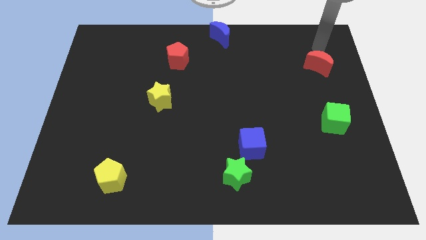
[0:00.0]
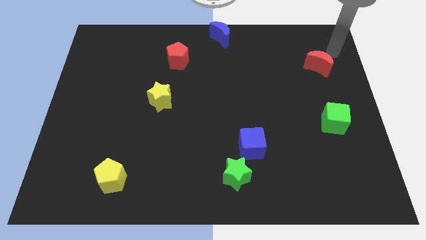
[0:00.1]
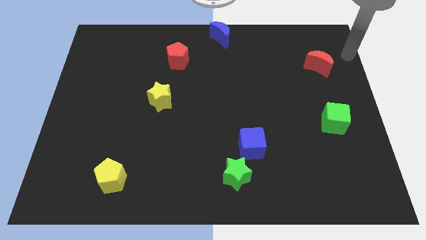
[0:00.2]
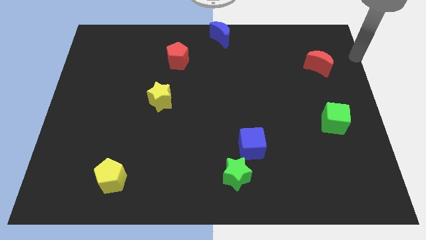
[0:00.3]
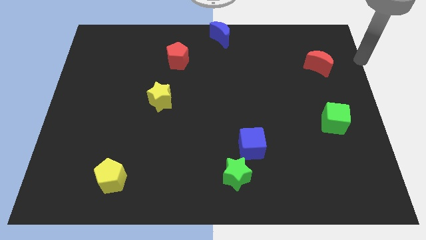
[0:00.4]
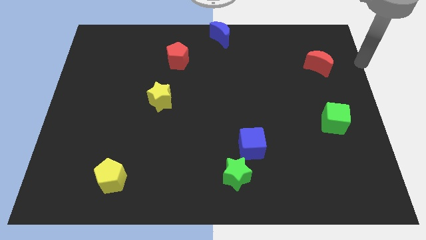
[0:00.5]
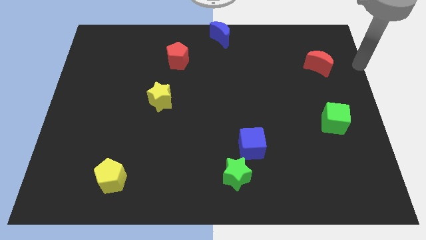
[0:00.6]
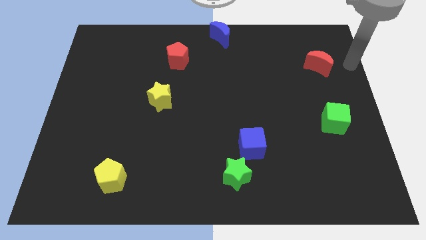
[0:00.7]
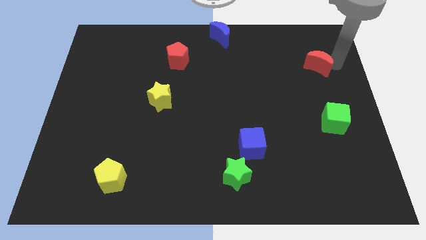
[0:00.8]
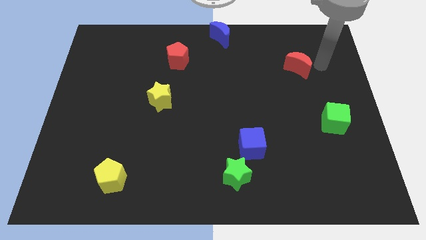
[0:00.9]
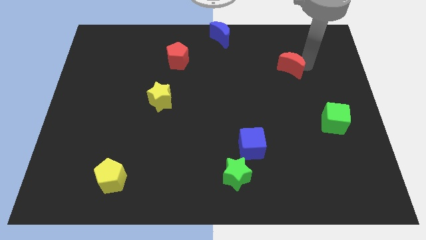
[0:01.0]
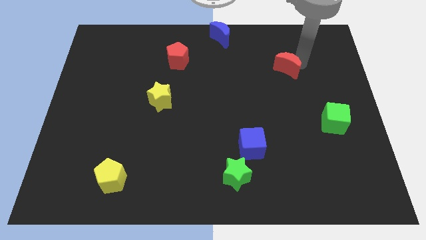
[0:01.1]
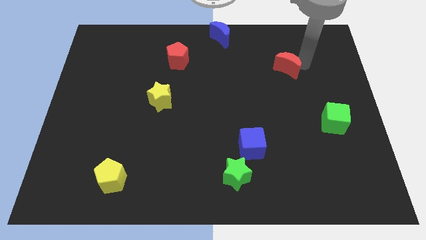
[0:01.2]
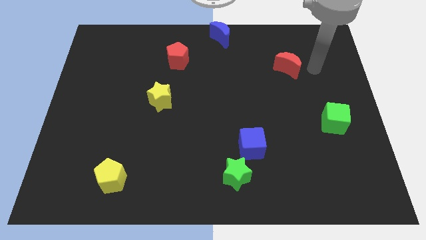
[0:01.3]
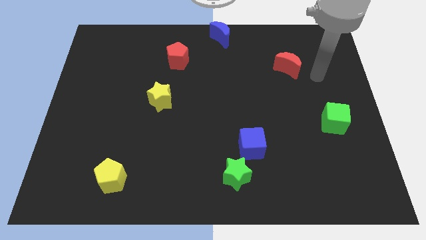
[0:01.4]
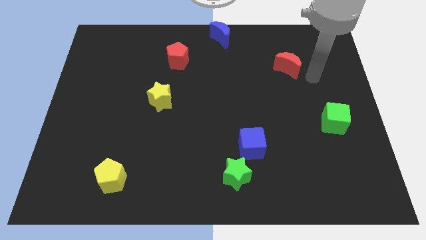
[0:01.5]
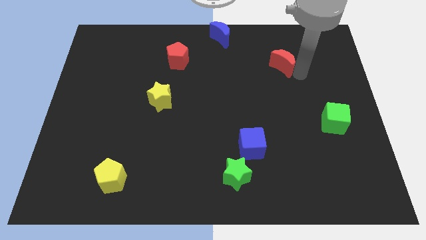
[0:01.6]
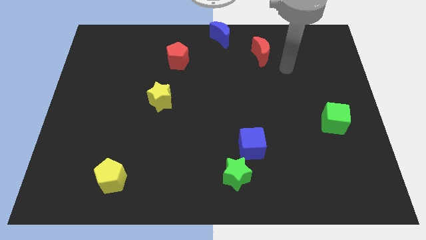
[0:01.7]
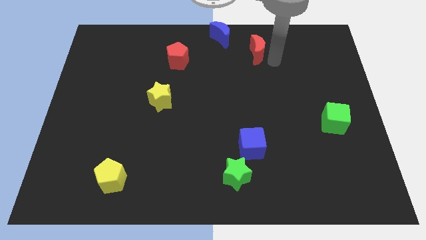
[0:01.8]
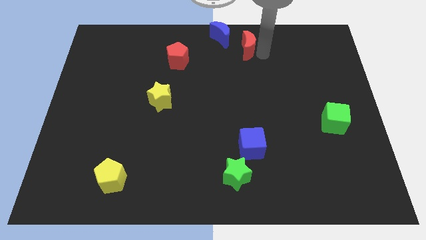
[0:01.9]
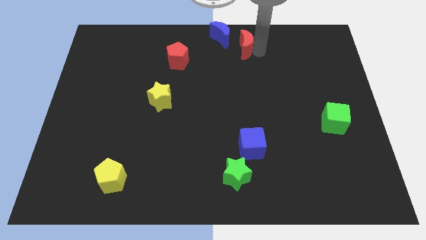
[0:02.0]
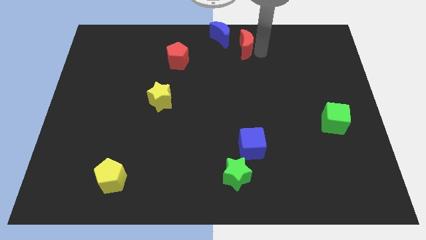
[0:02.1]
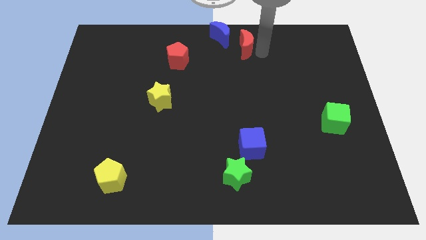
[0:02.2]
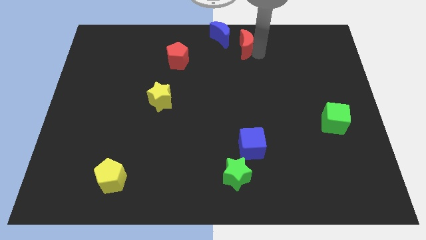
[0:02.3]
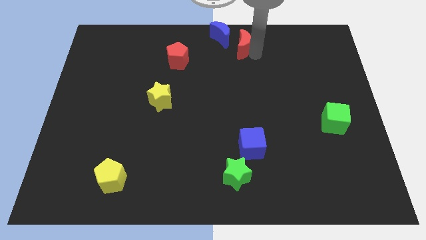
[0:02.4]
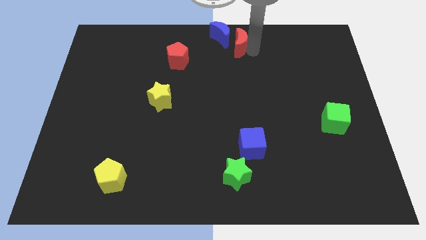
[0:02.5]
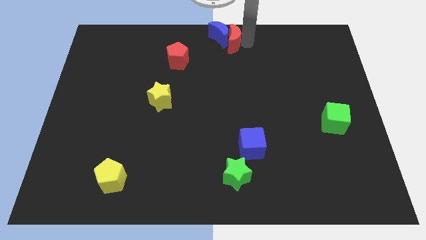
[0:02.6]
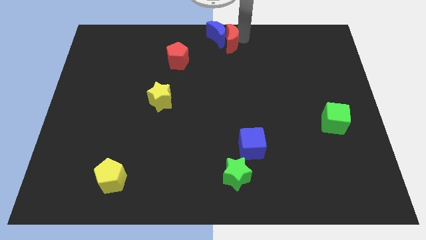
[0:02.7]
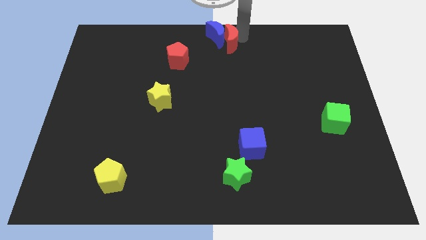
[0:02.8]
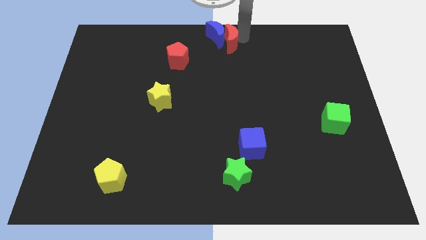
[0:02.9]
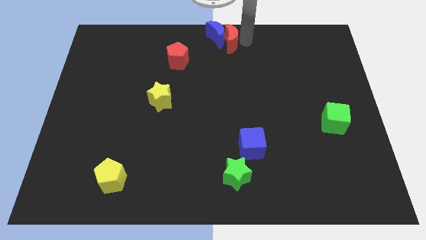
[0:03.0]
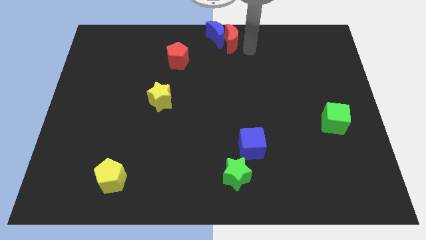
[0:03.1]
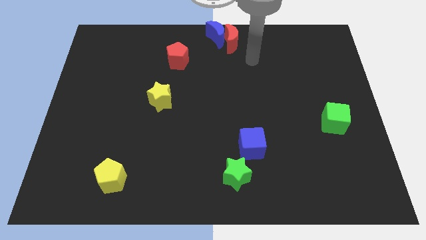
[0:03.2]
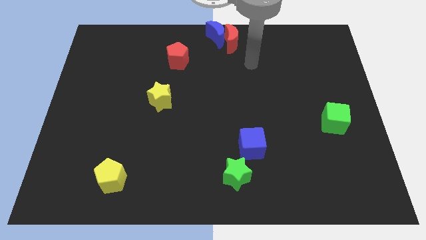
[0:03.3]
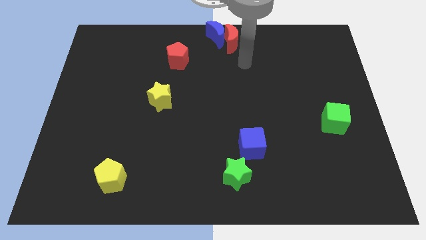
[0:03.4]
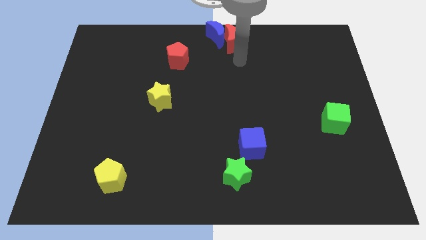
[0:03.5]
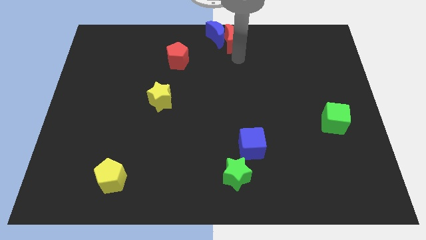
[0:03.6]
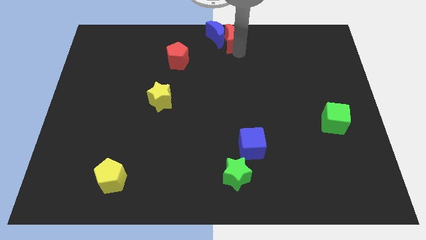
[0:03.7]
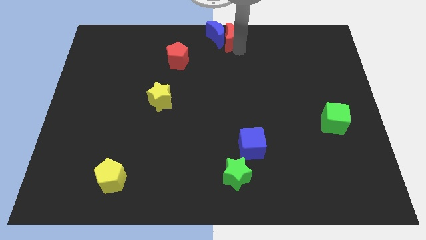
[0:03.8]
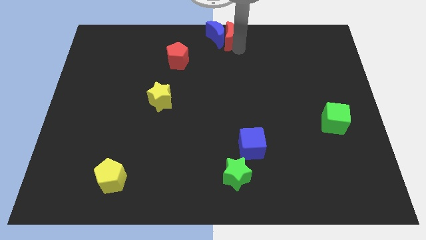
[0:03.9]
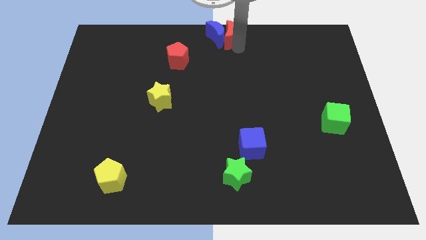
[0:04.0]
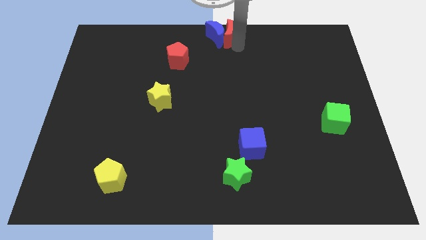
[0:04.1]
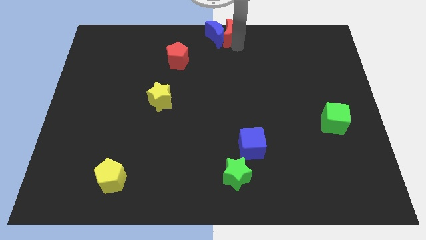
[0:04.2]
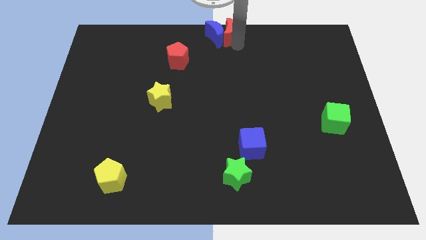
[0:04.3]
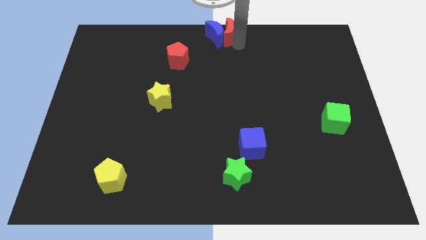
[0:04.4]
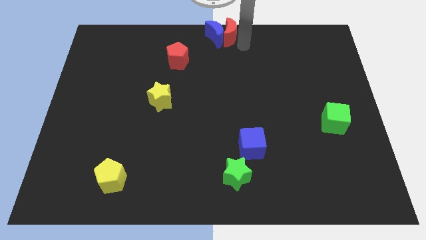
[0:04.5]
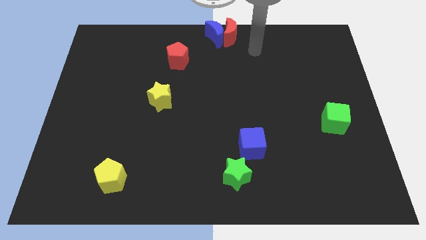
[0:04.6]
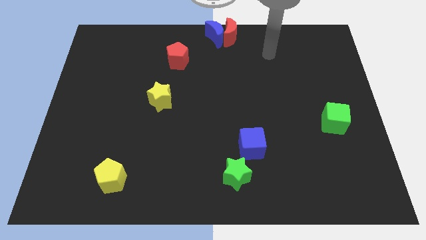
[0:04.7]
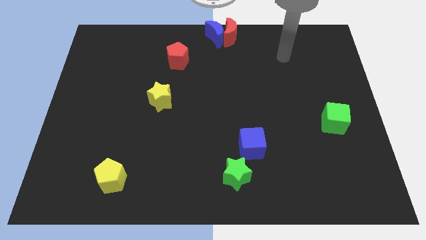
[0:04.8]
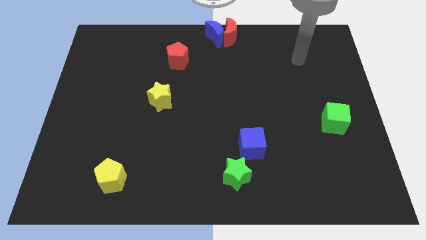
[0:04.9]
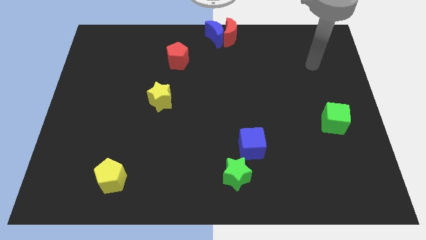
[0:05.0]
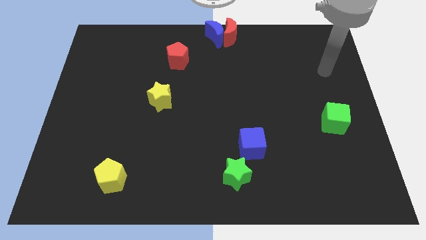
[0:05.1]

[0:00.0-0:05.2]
push the red crescent into the blue crescent

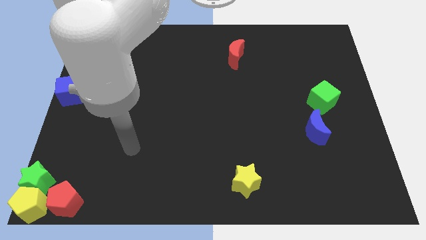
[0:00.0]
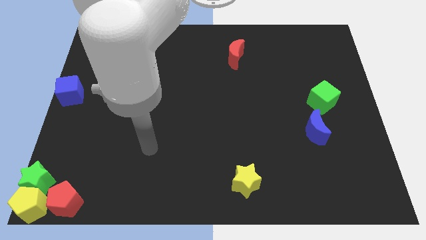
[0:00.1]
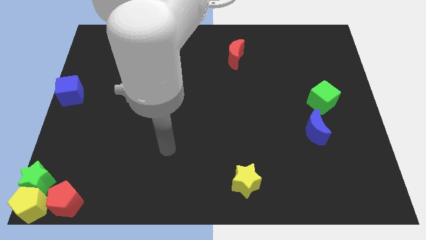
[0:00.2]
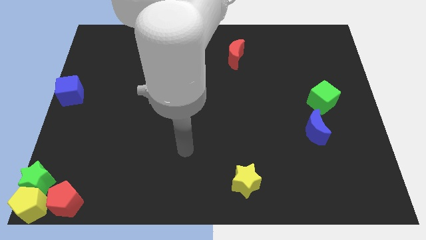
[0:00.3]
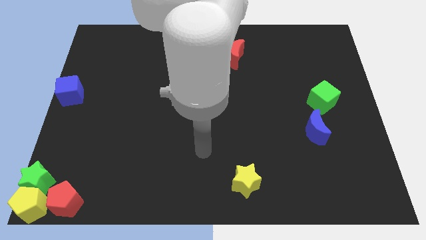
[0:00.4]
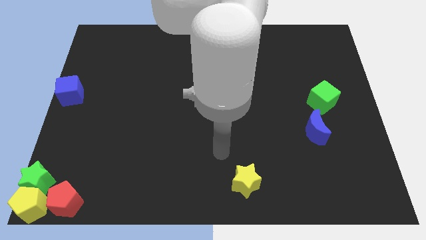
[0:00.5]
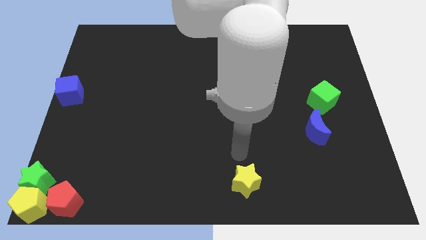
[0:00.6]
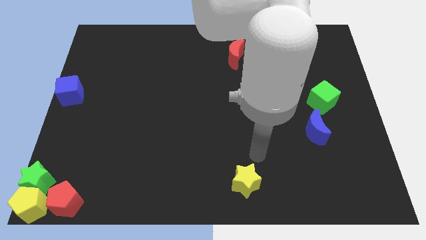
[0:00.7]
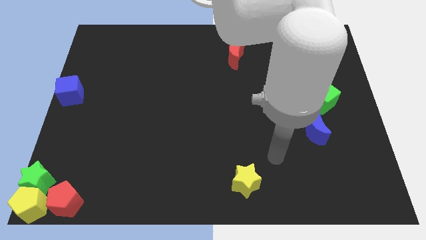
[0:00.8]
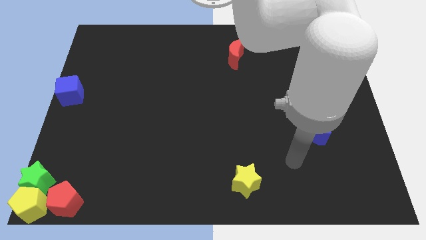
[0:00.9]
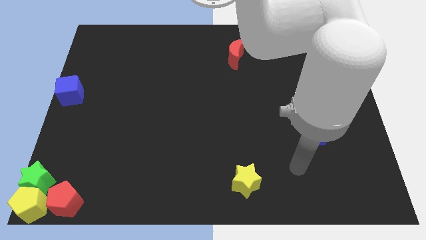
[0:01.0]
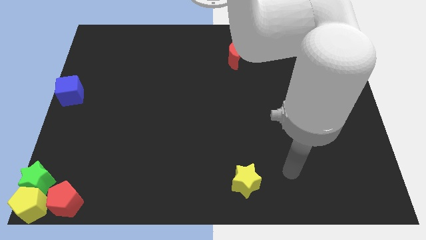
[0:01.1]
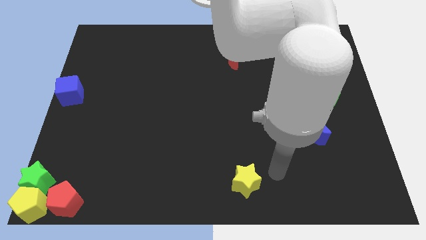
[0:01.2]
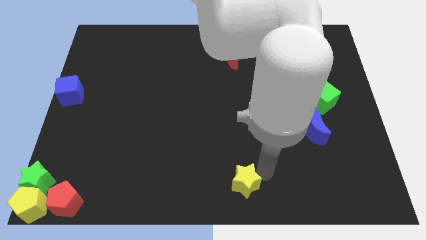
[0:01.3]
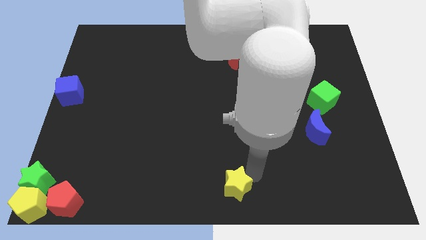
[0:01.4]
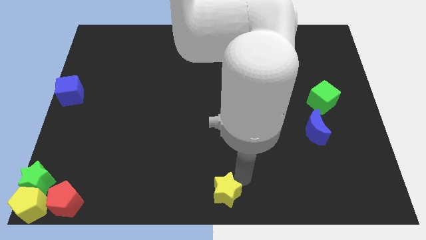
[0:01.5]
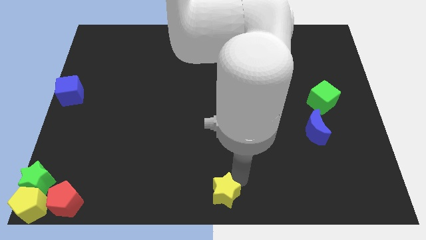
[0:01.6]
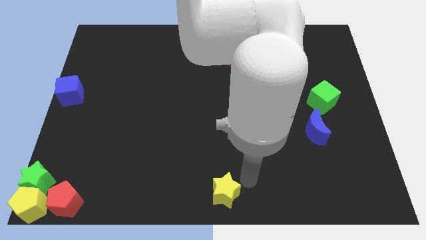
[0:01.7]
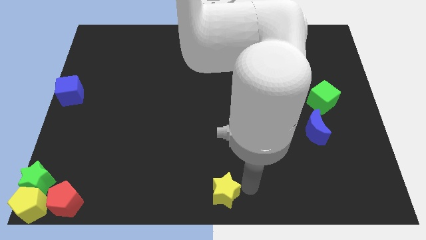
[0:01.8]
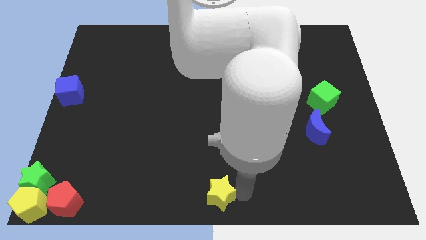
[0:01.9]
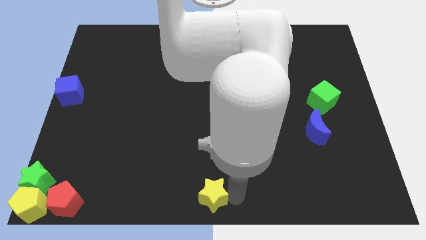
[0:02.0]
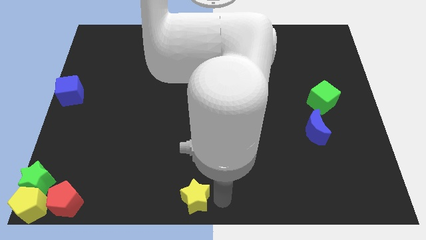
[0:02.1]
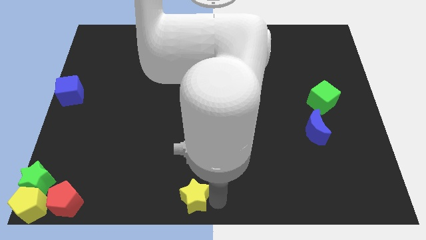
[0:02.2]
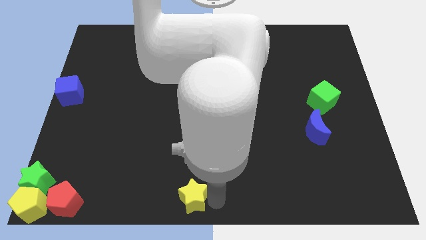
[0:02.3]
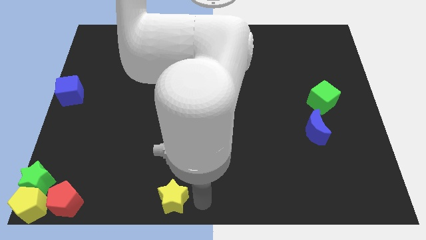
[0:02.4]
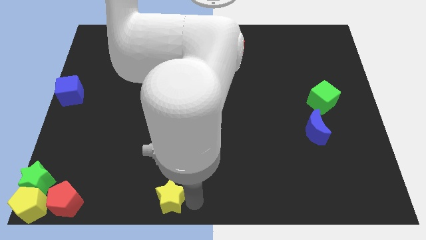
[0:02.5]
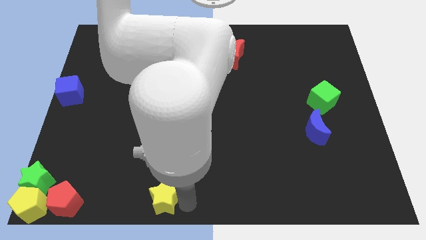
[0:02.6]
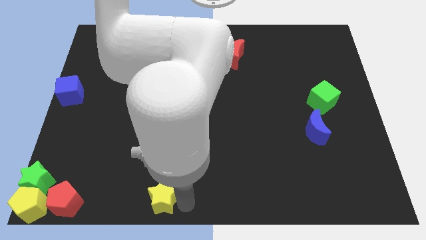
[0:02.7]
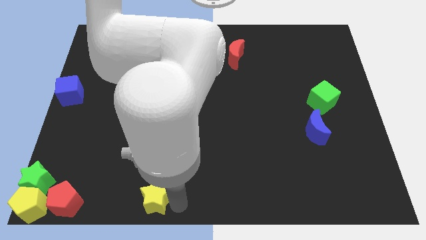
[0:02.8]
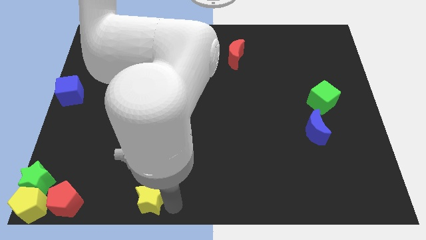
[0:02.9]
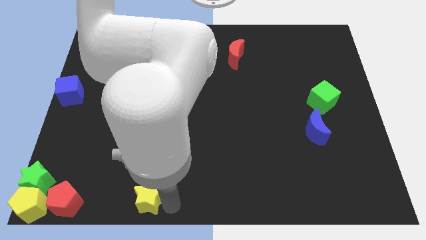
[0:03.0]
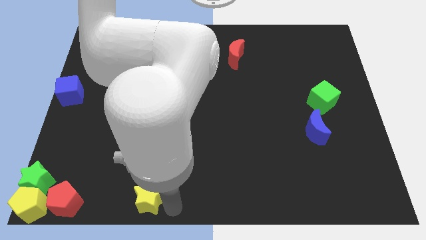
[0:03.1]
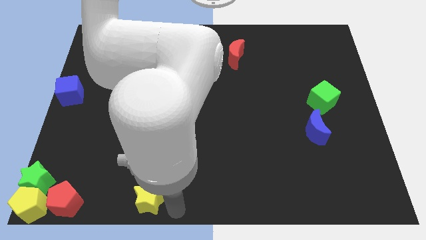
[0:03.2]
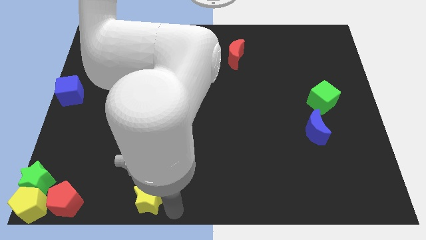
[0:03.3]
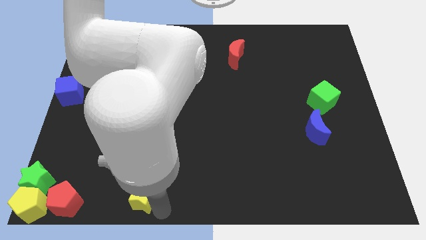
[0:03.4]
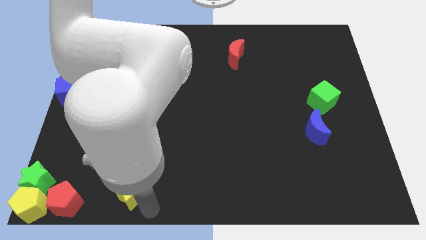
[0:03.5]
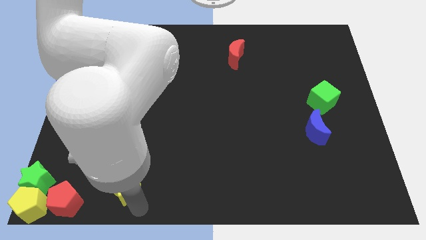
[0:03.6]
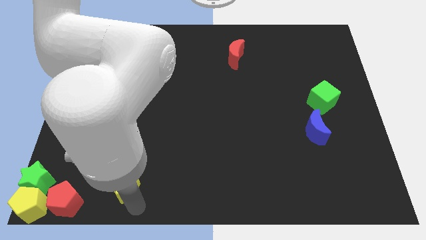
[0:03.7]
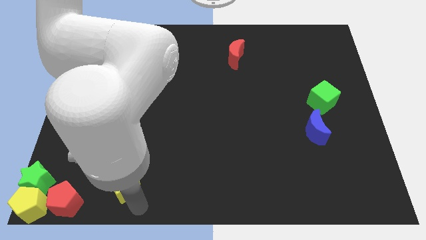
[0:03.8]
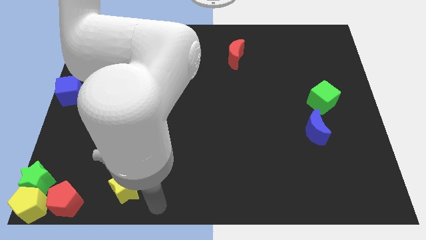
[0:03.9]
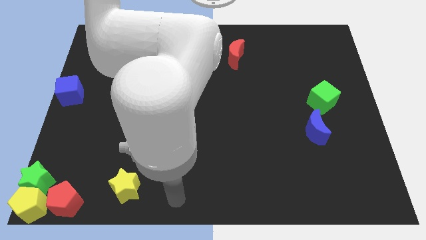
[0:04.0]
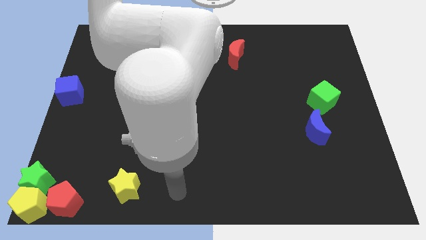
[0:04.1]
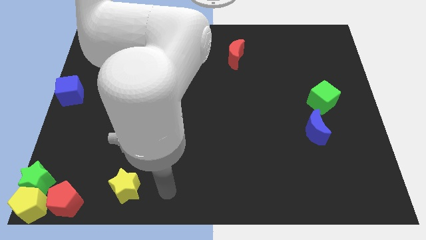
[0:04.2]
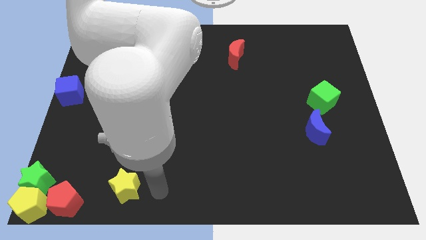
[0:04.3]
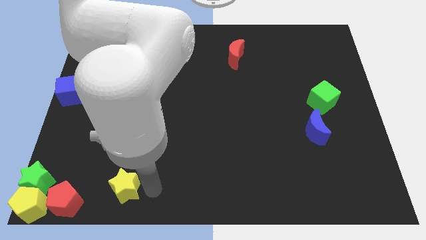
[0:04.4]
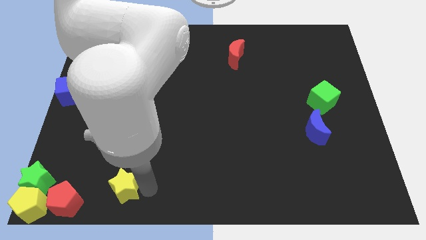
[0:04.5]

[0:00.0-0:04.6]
push the yellow star towards the red pentagon
